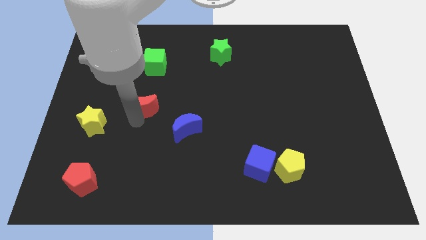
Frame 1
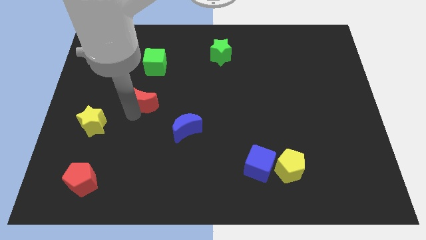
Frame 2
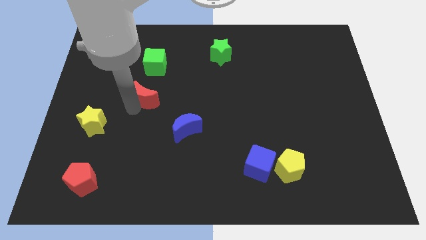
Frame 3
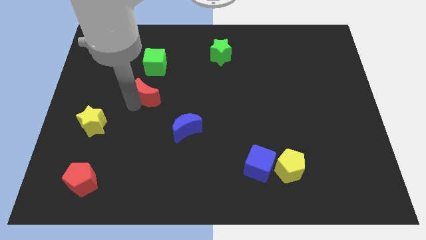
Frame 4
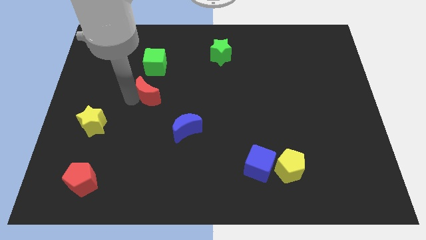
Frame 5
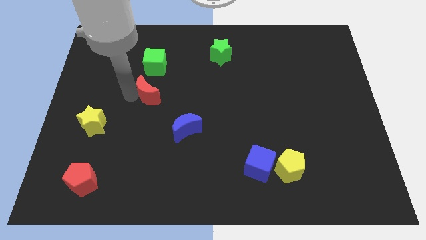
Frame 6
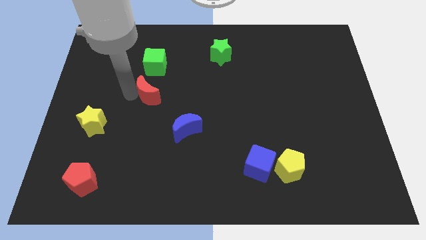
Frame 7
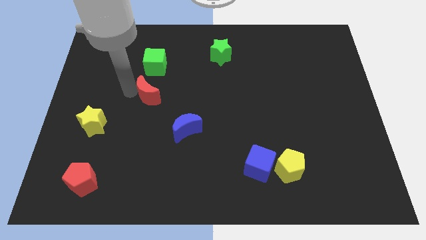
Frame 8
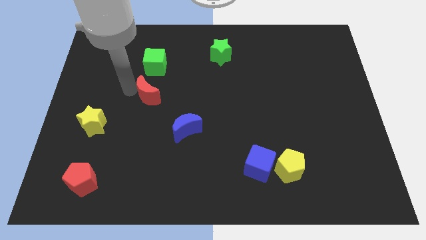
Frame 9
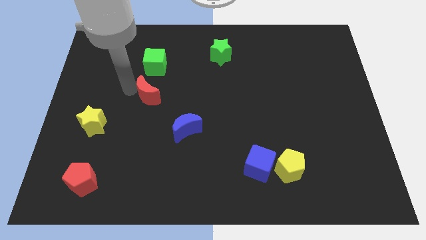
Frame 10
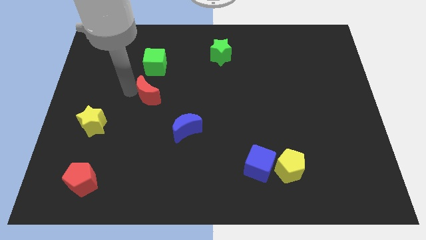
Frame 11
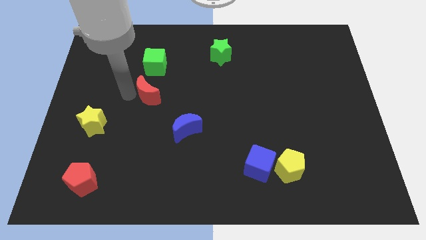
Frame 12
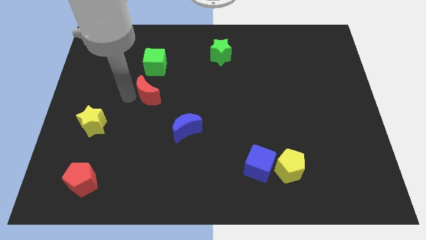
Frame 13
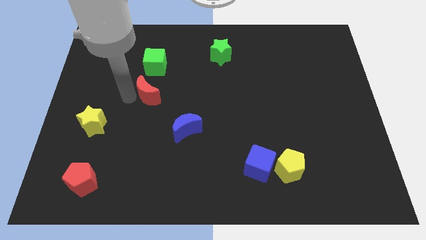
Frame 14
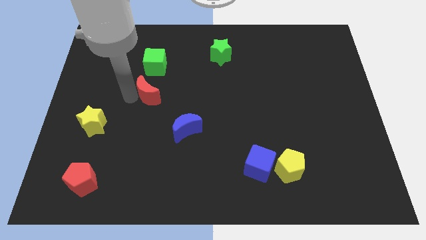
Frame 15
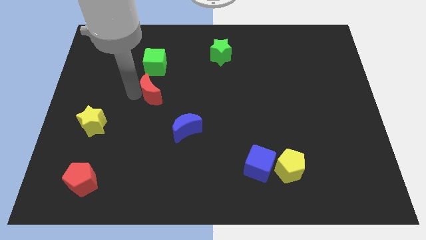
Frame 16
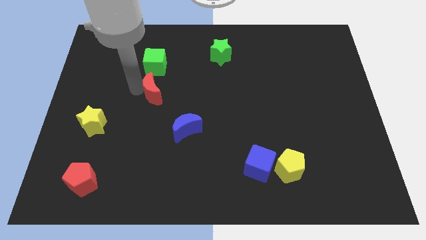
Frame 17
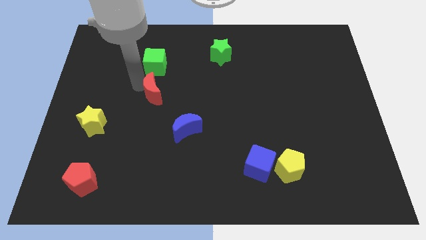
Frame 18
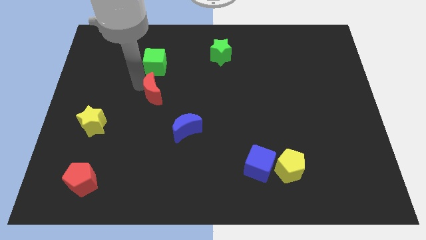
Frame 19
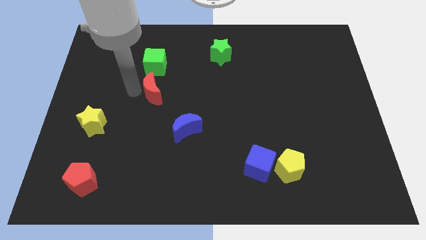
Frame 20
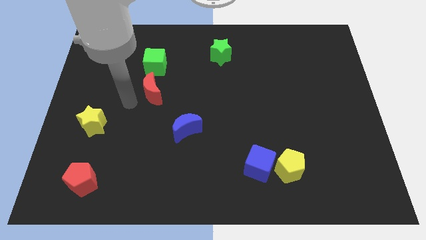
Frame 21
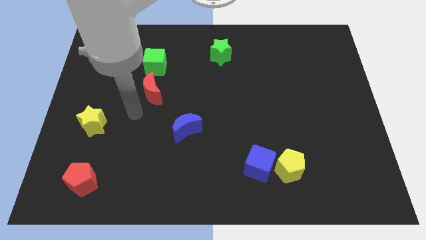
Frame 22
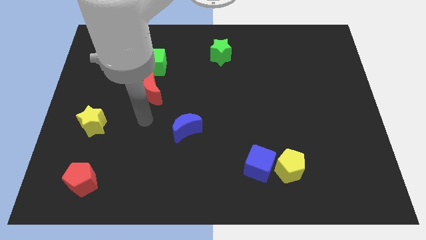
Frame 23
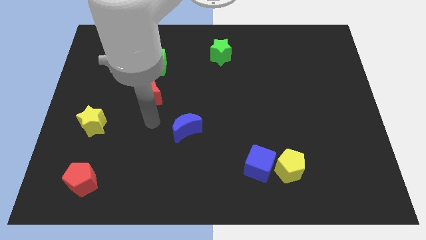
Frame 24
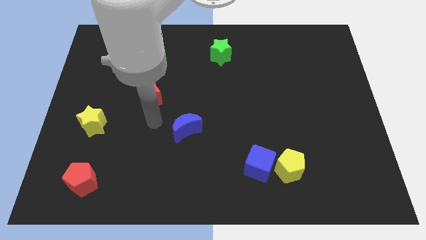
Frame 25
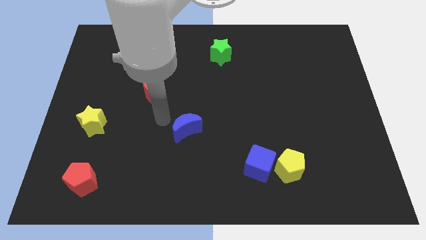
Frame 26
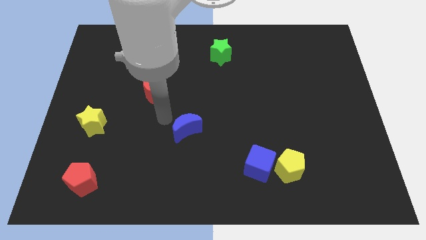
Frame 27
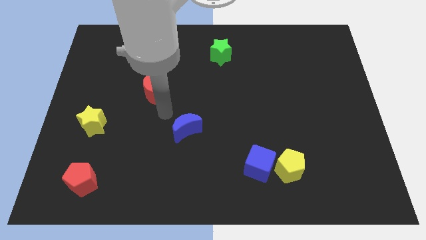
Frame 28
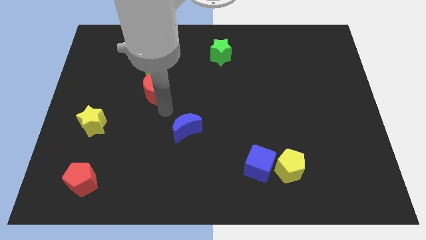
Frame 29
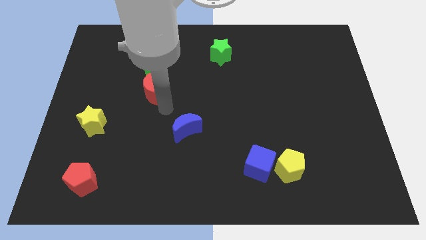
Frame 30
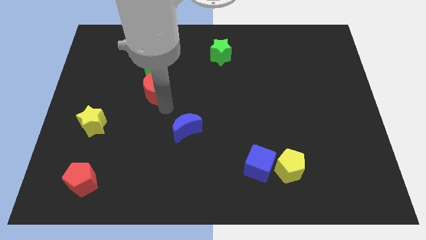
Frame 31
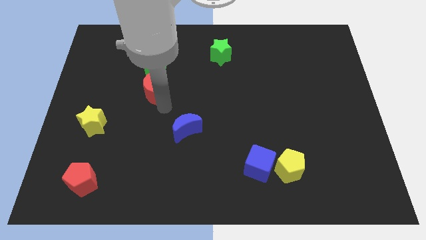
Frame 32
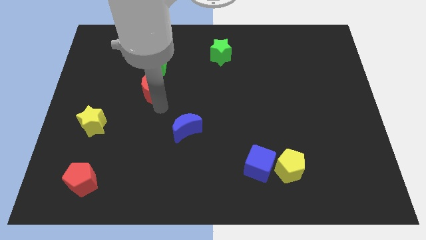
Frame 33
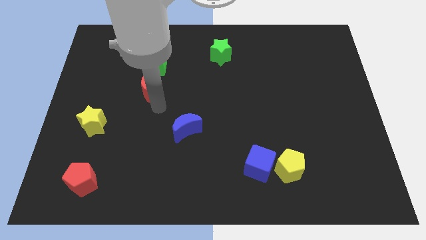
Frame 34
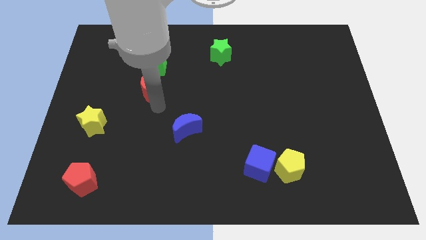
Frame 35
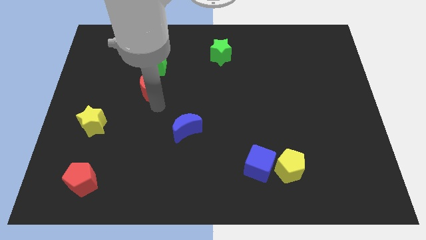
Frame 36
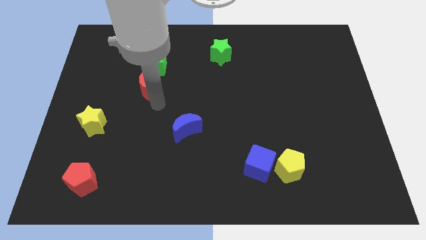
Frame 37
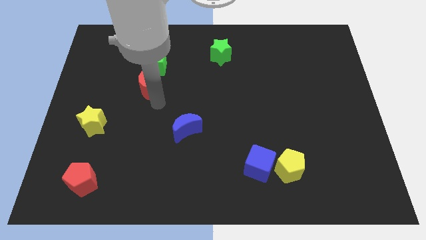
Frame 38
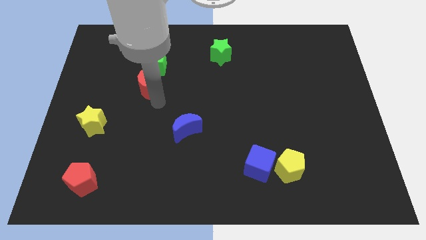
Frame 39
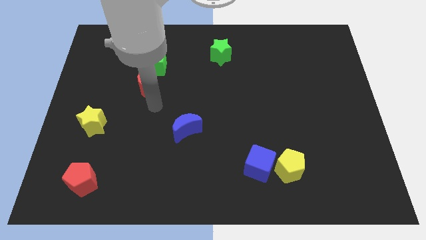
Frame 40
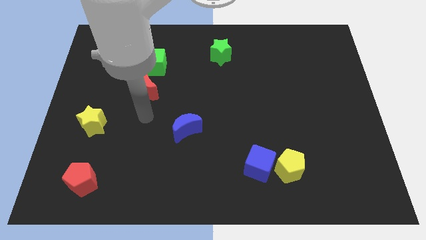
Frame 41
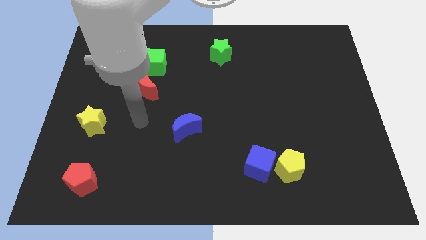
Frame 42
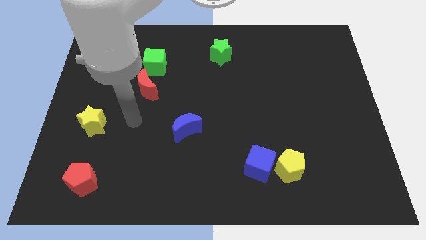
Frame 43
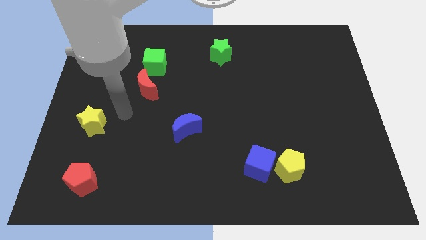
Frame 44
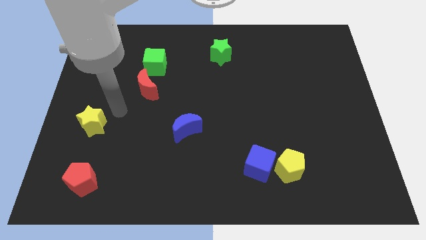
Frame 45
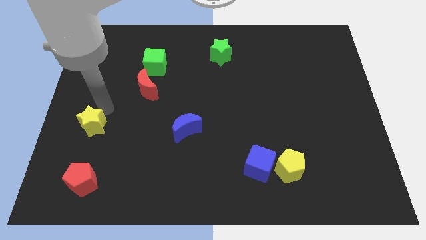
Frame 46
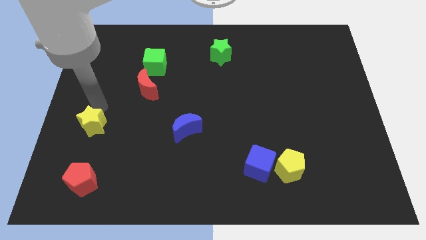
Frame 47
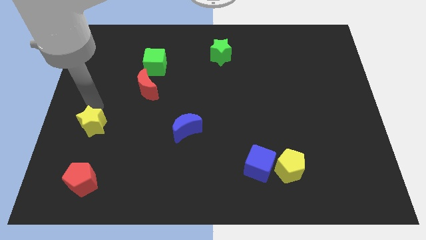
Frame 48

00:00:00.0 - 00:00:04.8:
place the red moon below the green cube

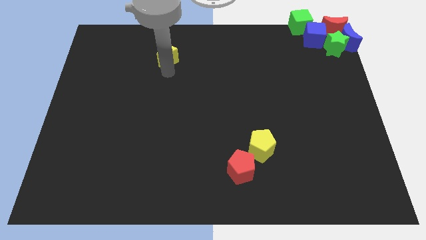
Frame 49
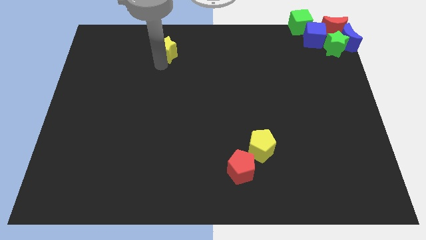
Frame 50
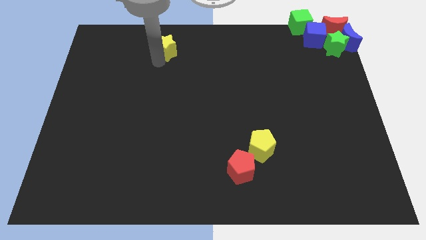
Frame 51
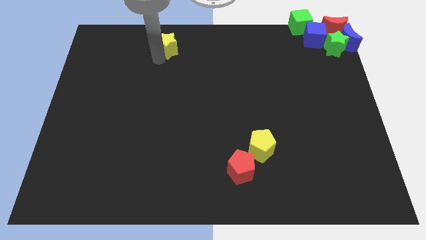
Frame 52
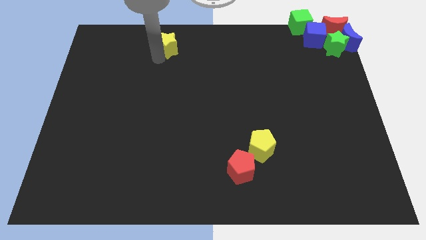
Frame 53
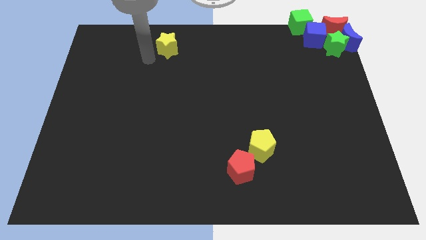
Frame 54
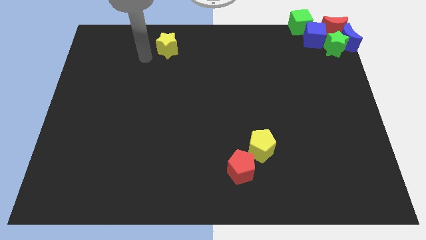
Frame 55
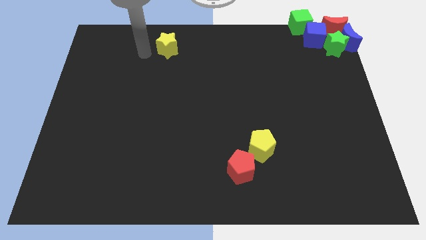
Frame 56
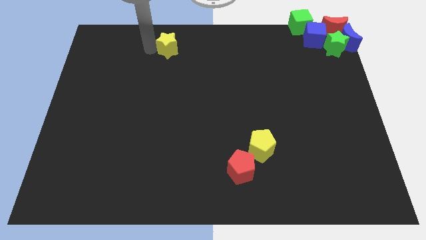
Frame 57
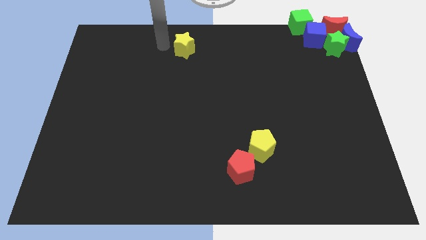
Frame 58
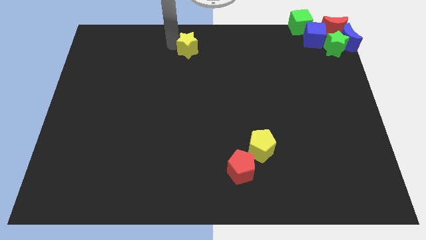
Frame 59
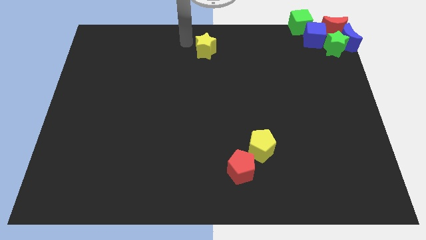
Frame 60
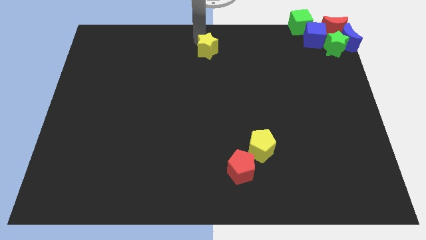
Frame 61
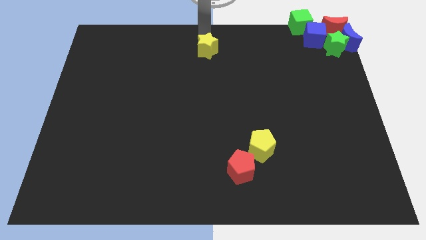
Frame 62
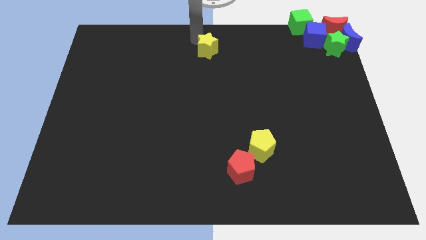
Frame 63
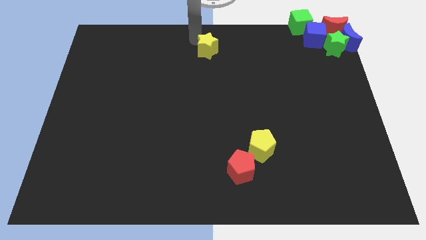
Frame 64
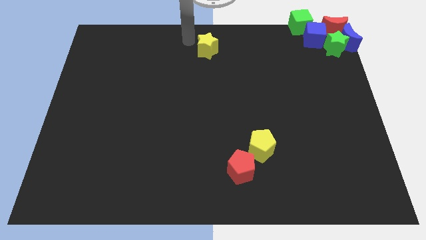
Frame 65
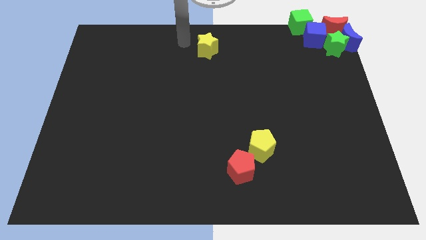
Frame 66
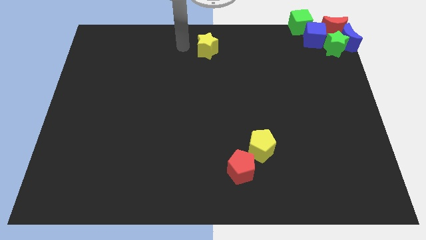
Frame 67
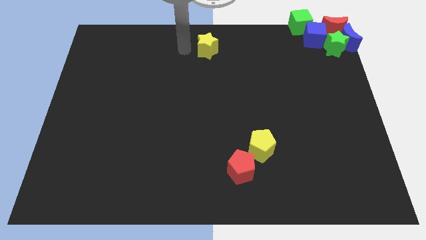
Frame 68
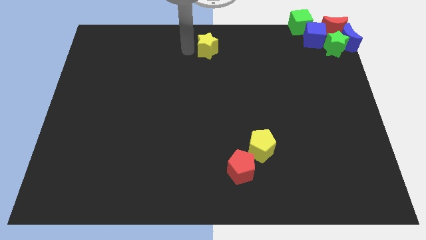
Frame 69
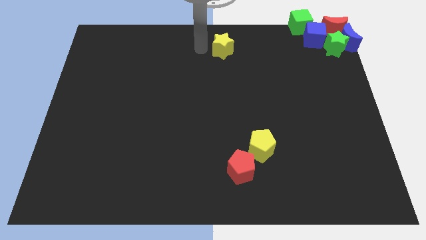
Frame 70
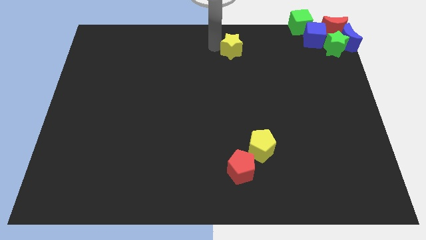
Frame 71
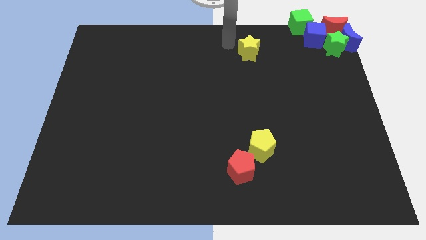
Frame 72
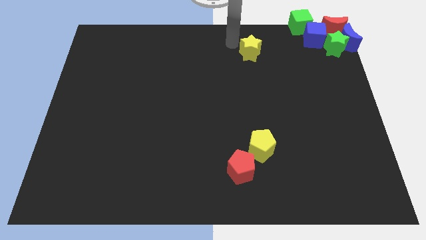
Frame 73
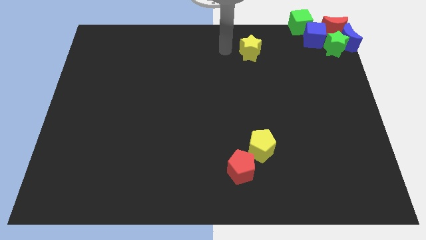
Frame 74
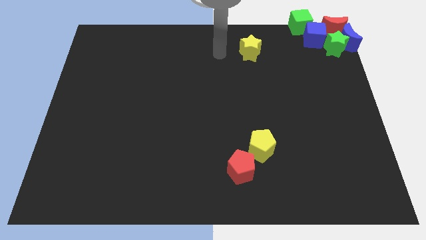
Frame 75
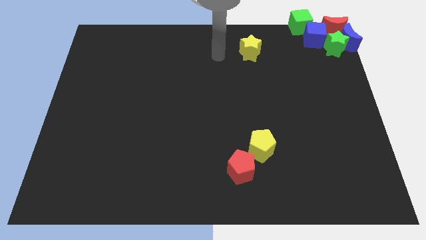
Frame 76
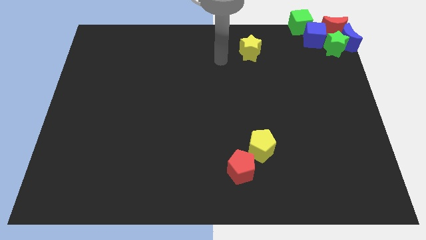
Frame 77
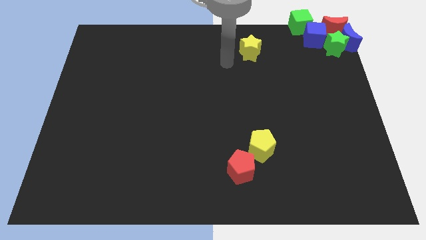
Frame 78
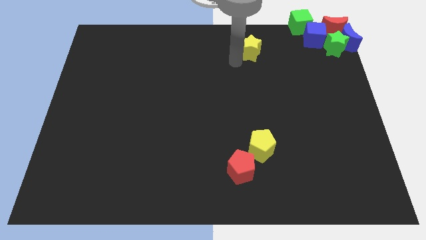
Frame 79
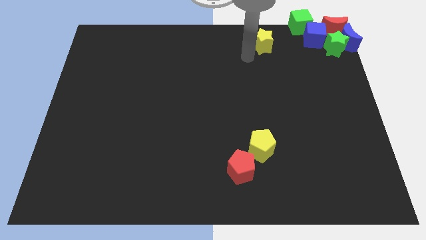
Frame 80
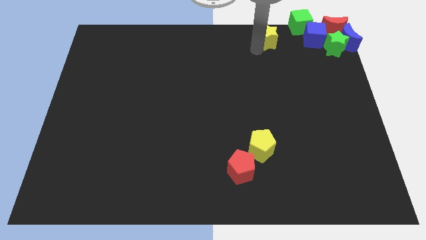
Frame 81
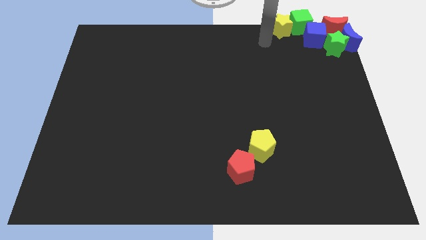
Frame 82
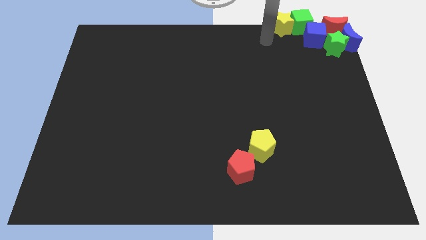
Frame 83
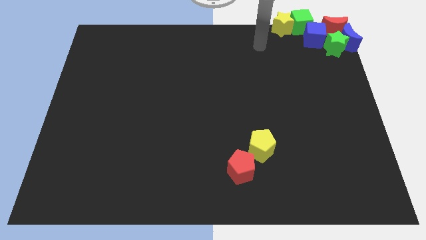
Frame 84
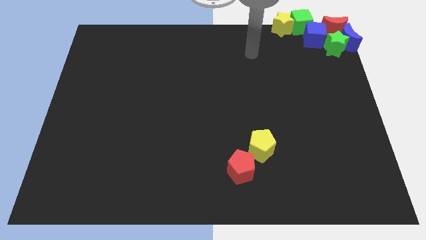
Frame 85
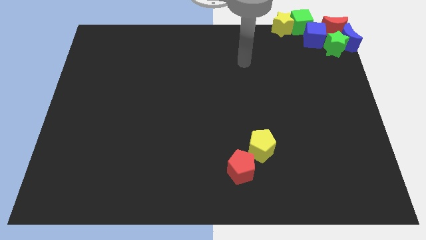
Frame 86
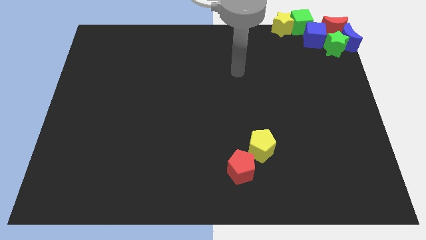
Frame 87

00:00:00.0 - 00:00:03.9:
place yellow star to the left of green cube

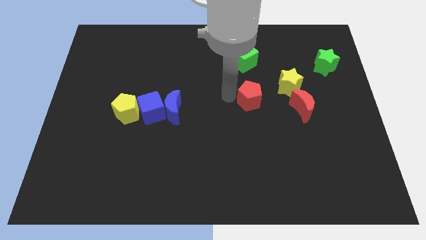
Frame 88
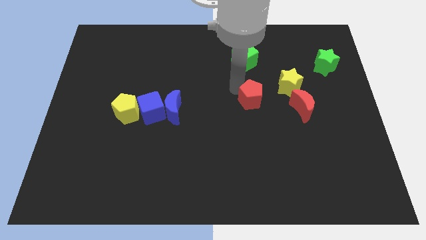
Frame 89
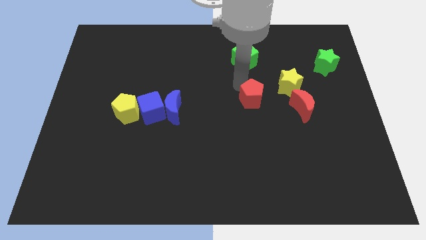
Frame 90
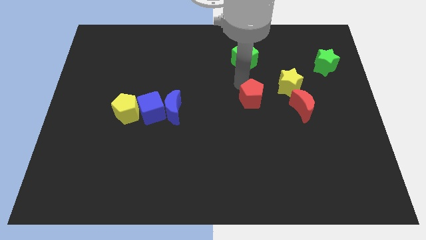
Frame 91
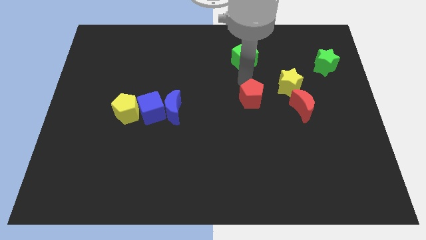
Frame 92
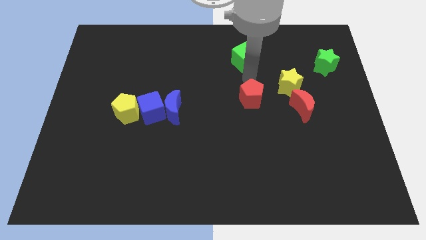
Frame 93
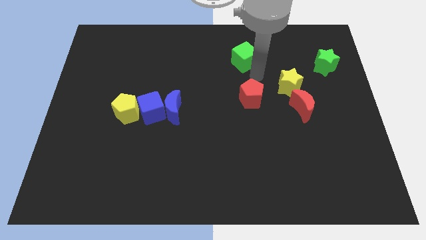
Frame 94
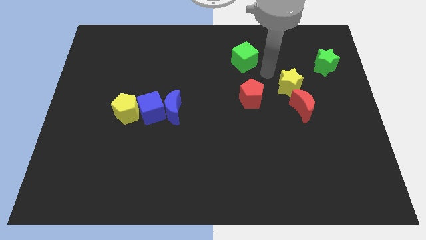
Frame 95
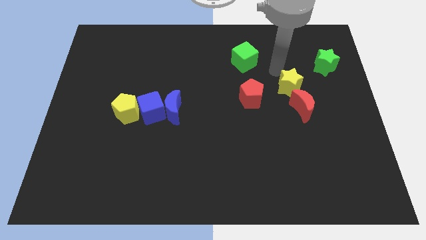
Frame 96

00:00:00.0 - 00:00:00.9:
move your arm away from red pentagon
